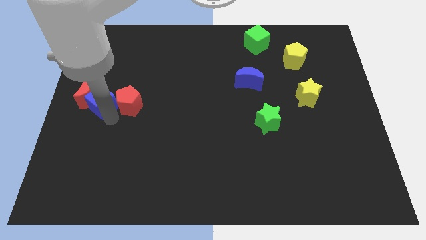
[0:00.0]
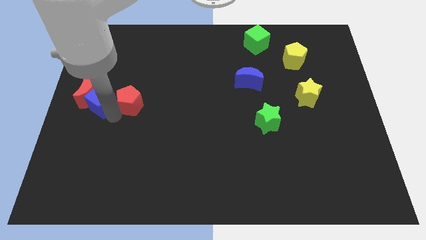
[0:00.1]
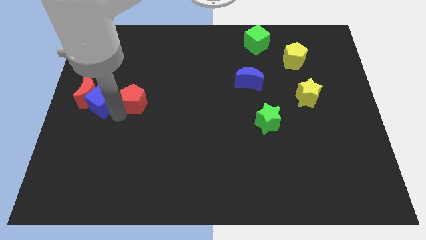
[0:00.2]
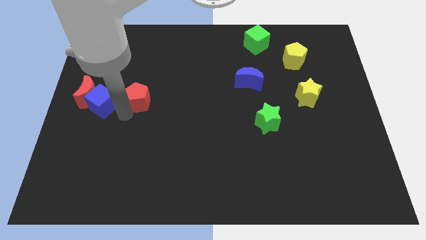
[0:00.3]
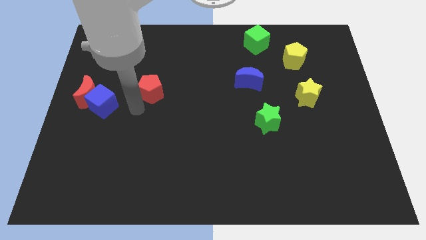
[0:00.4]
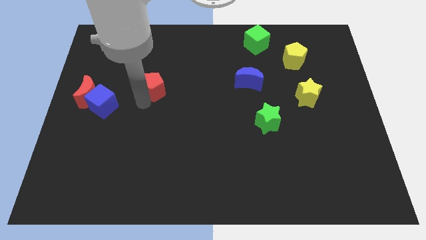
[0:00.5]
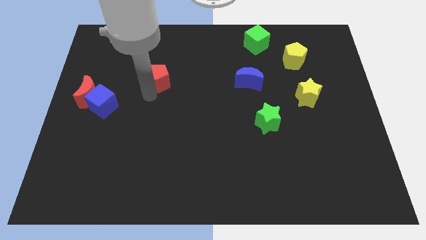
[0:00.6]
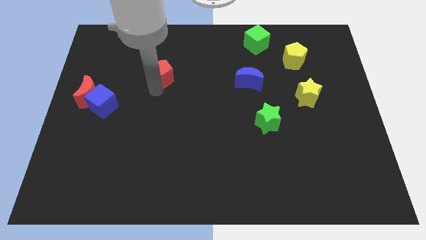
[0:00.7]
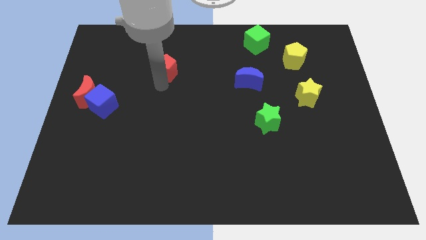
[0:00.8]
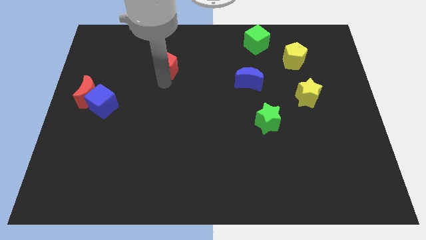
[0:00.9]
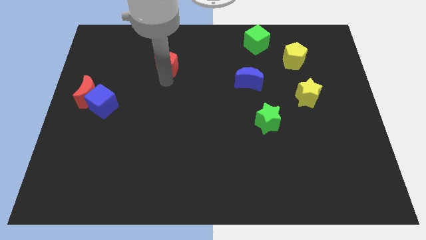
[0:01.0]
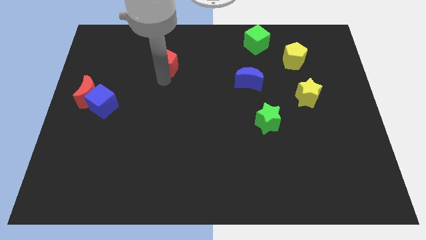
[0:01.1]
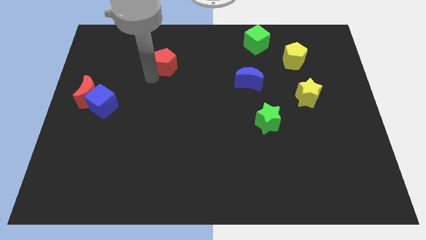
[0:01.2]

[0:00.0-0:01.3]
separate red pentagon from blue cube

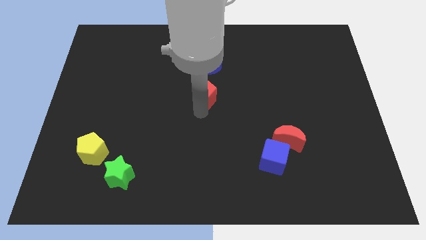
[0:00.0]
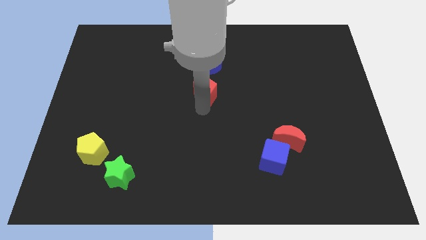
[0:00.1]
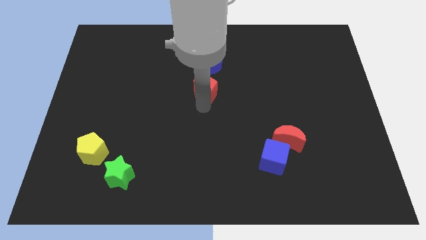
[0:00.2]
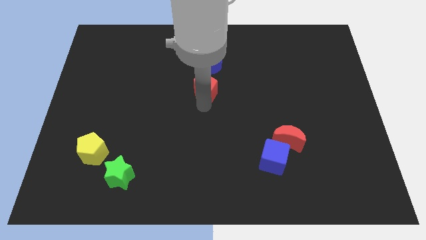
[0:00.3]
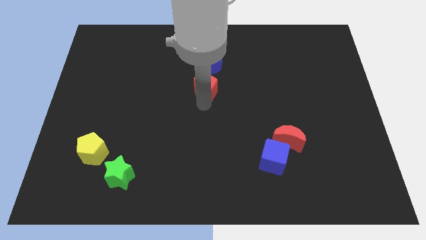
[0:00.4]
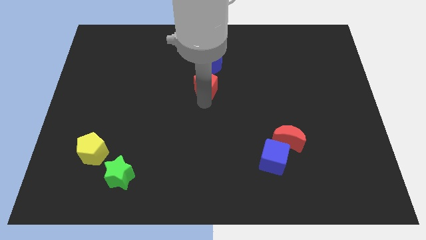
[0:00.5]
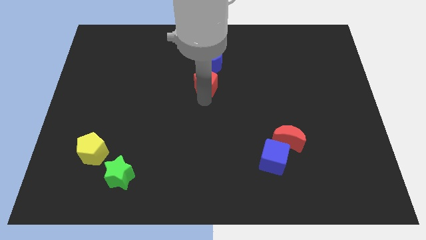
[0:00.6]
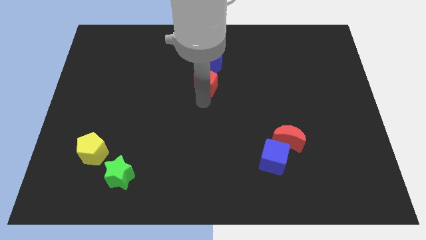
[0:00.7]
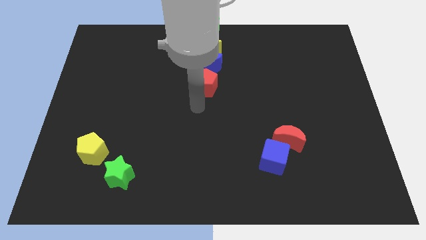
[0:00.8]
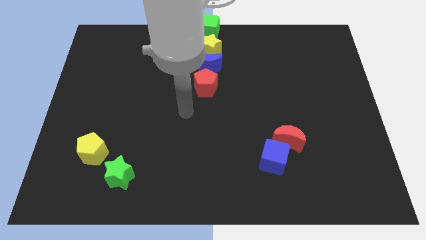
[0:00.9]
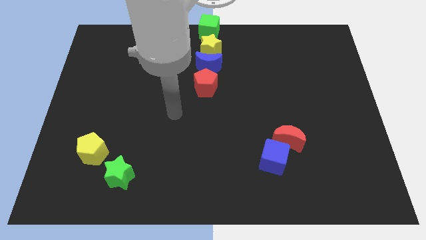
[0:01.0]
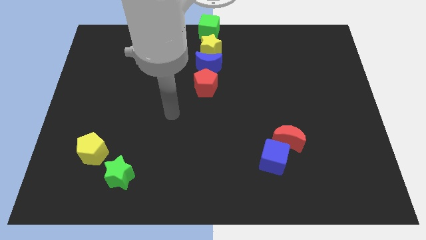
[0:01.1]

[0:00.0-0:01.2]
push the red pentagon below blue moon

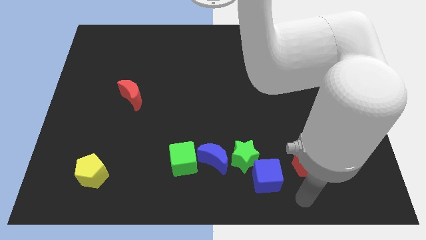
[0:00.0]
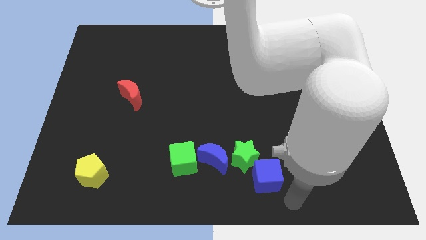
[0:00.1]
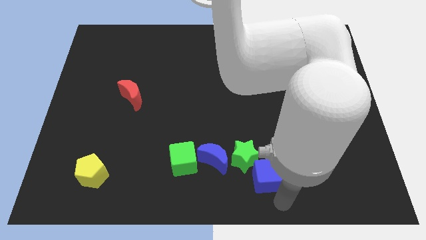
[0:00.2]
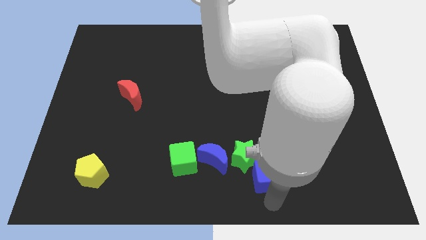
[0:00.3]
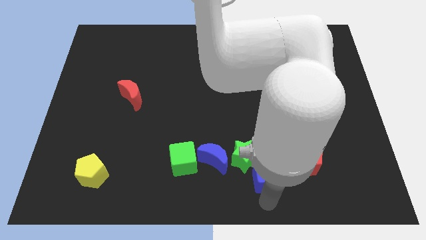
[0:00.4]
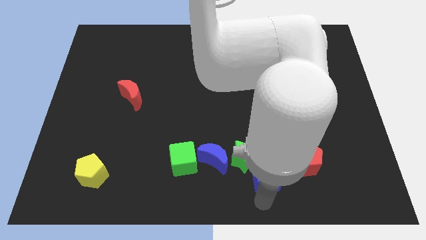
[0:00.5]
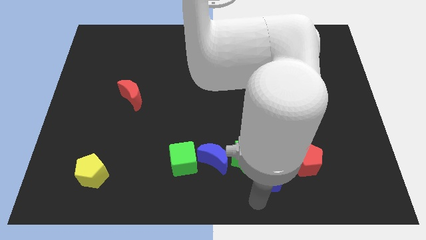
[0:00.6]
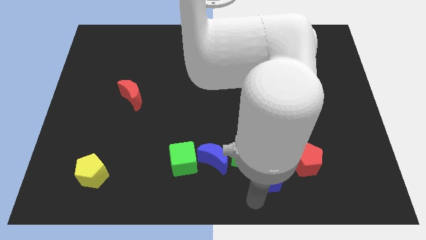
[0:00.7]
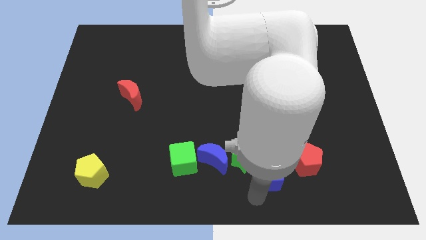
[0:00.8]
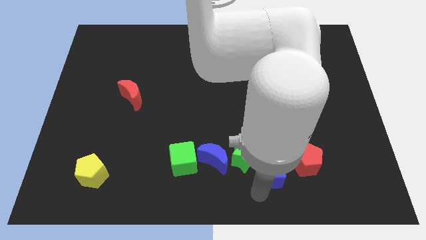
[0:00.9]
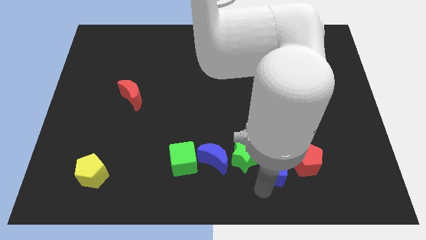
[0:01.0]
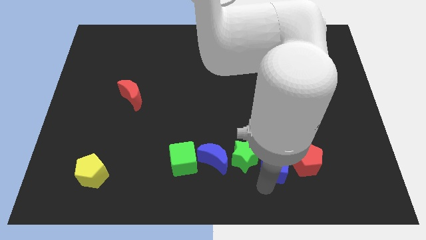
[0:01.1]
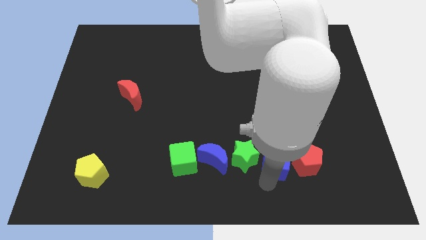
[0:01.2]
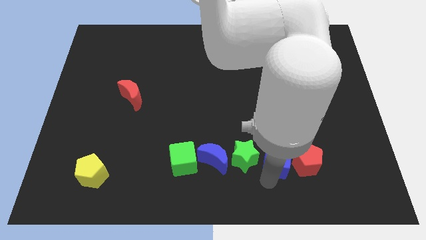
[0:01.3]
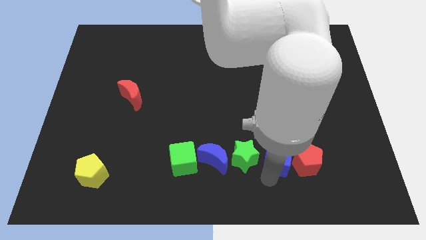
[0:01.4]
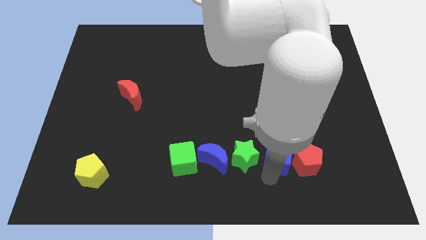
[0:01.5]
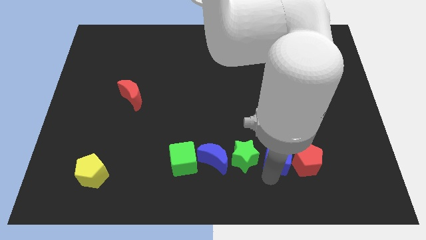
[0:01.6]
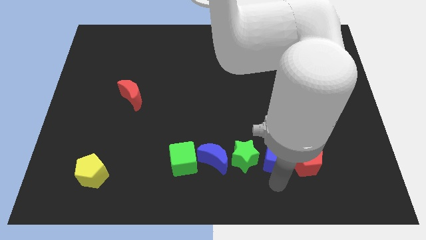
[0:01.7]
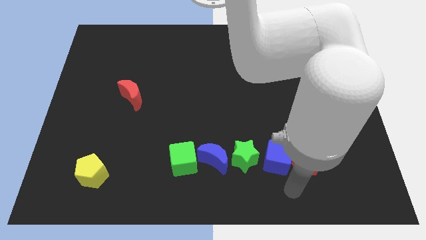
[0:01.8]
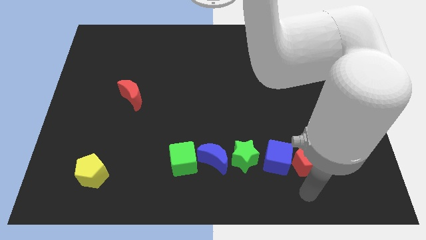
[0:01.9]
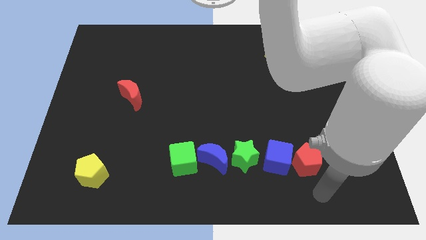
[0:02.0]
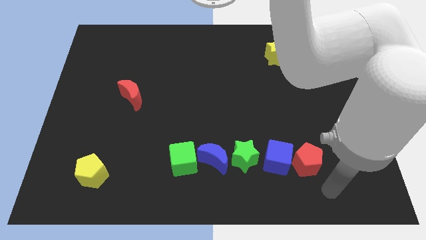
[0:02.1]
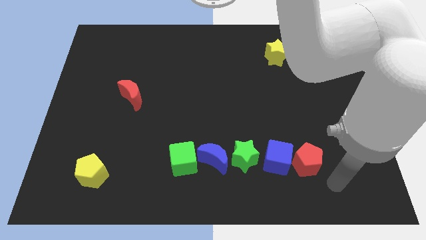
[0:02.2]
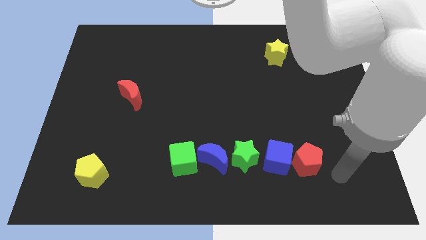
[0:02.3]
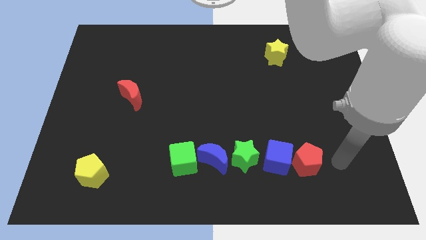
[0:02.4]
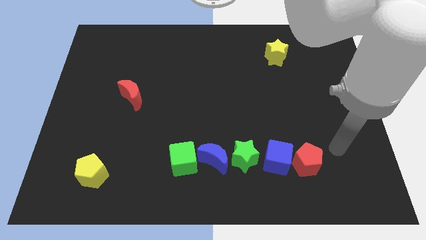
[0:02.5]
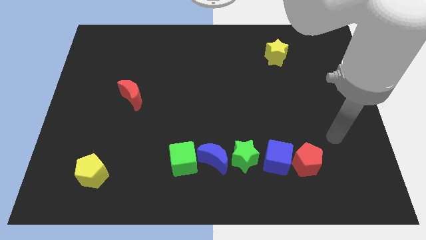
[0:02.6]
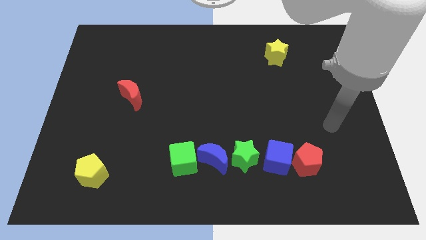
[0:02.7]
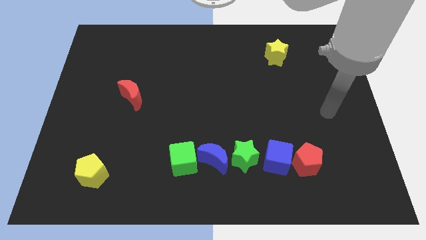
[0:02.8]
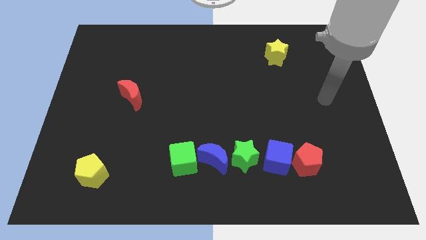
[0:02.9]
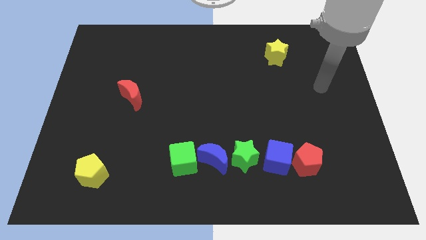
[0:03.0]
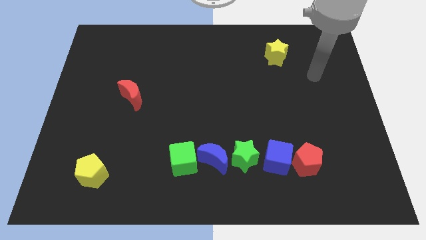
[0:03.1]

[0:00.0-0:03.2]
place the blue cube in between the red pentagon and the green star

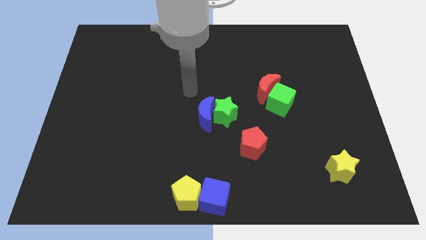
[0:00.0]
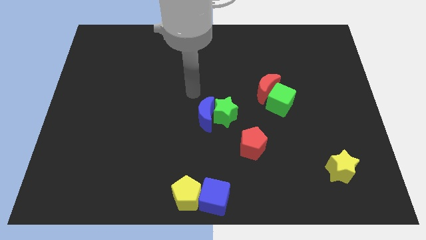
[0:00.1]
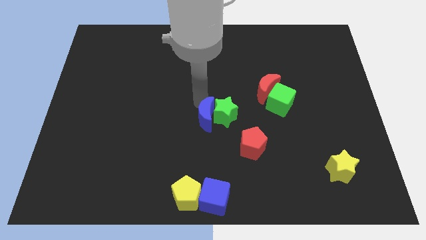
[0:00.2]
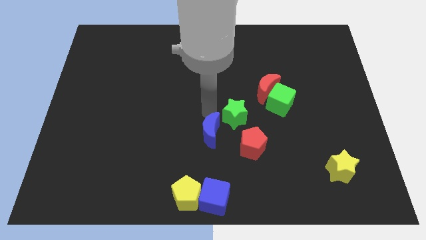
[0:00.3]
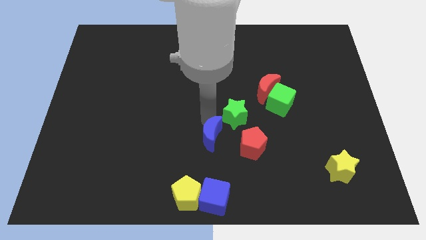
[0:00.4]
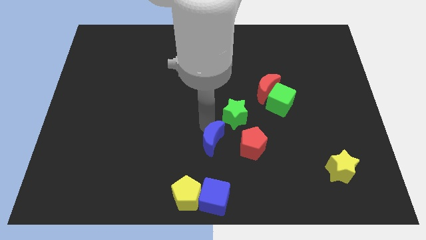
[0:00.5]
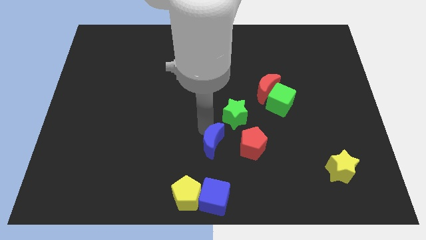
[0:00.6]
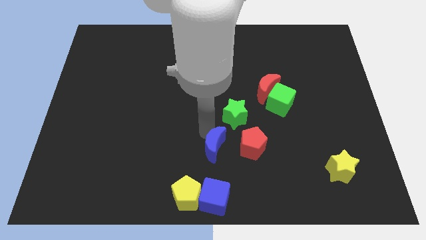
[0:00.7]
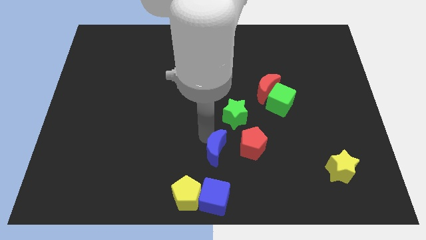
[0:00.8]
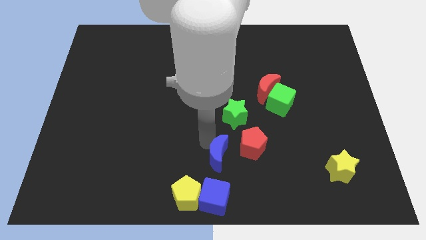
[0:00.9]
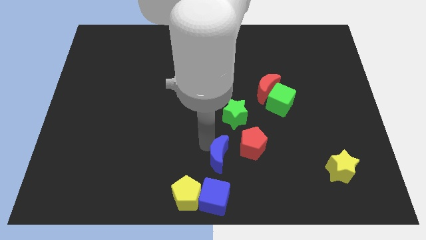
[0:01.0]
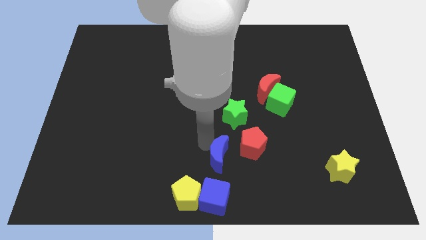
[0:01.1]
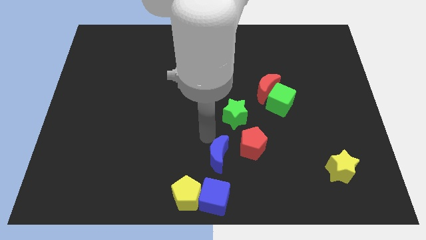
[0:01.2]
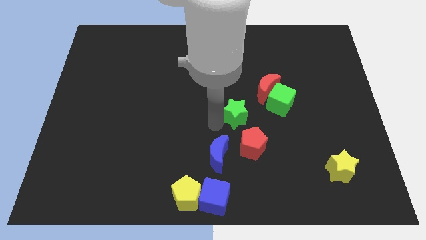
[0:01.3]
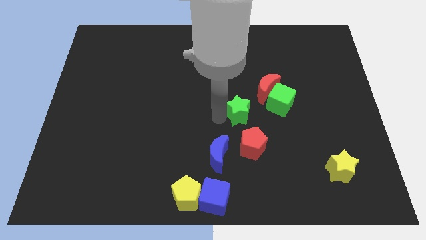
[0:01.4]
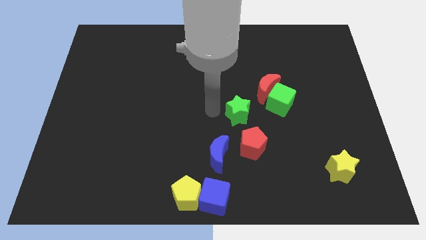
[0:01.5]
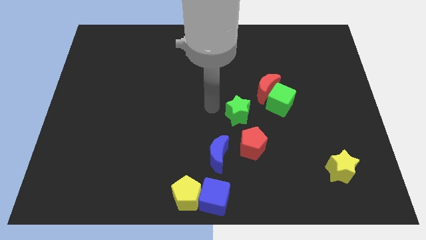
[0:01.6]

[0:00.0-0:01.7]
place the blue moon to the top of the blue cube

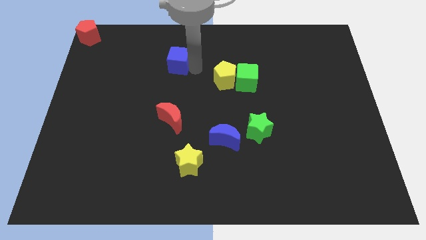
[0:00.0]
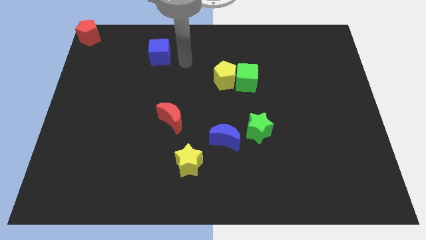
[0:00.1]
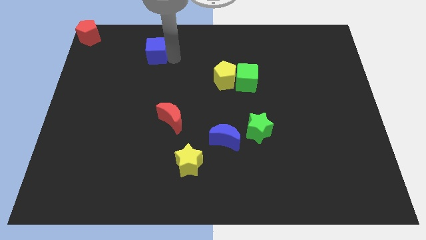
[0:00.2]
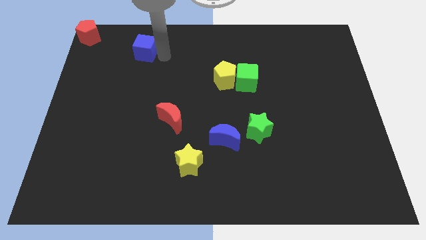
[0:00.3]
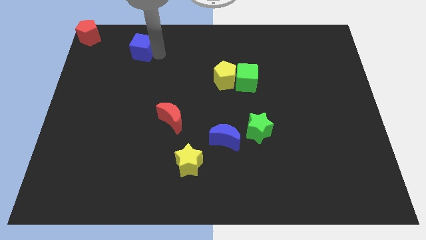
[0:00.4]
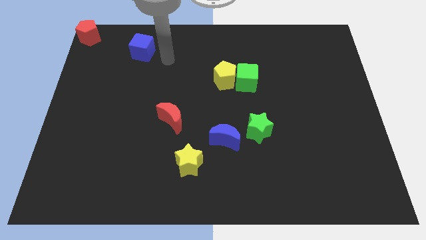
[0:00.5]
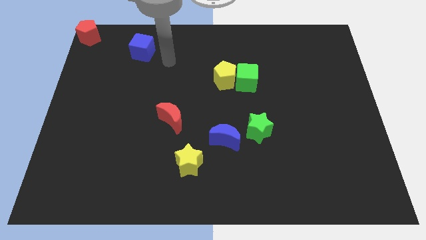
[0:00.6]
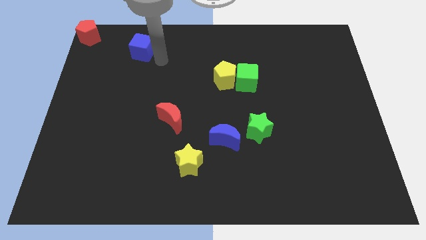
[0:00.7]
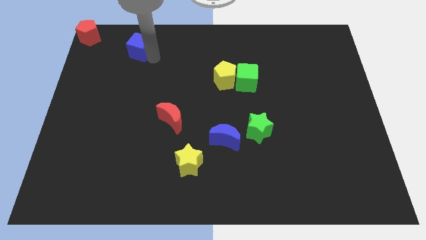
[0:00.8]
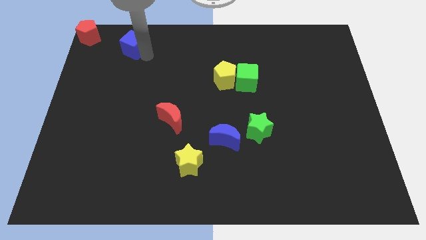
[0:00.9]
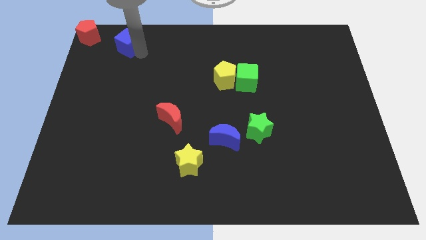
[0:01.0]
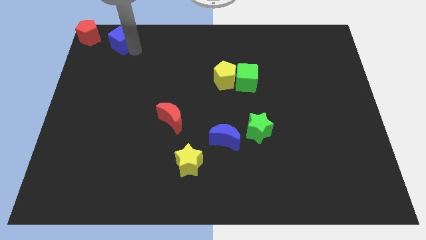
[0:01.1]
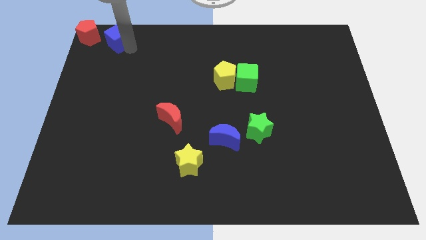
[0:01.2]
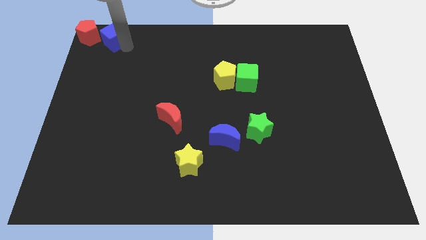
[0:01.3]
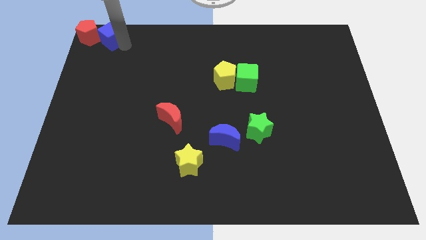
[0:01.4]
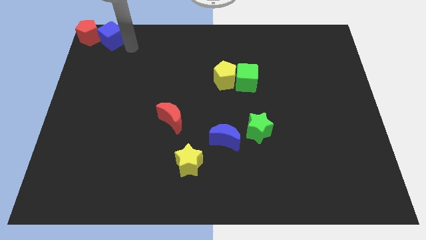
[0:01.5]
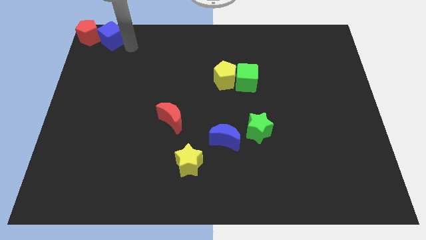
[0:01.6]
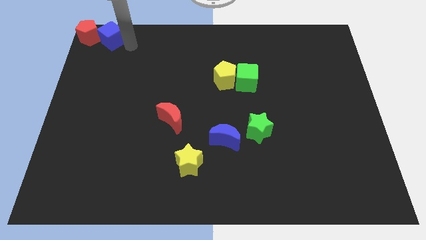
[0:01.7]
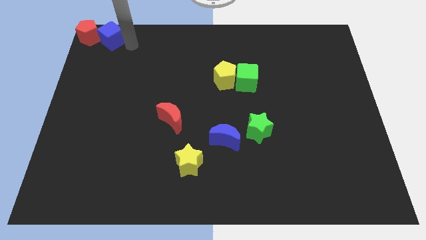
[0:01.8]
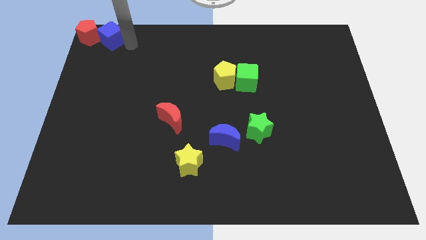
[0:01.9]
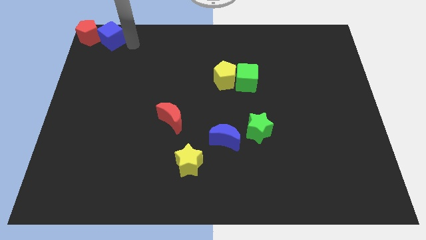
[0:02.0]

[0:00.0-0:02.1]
move the blue cube to the right of the red pentagon
